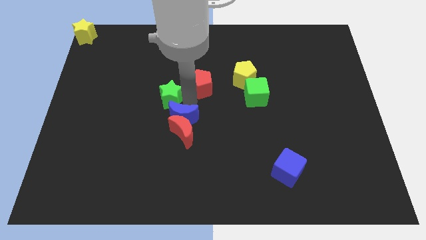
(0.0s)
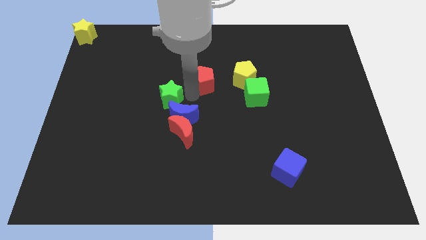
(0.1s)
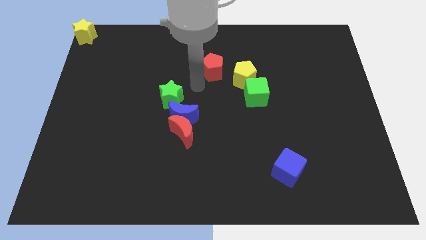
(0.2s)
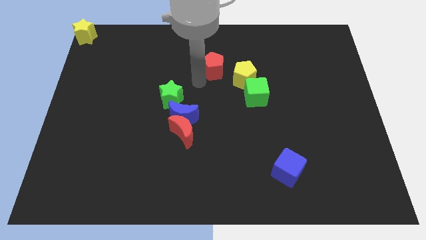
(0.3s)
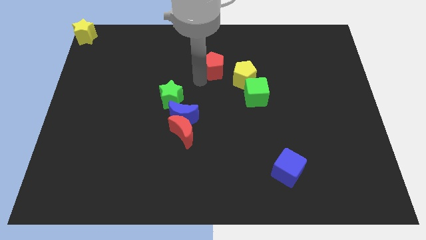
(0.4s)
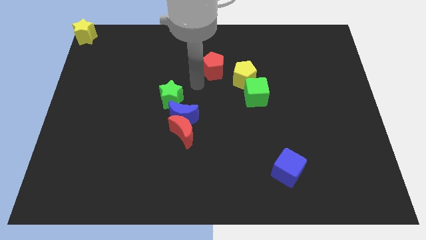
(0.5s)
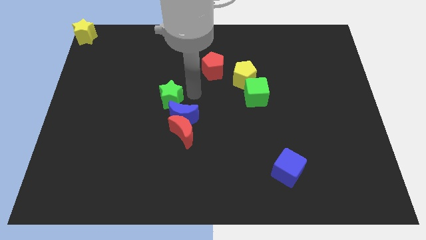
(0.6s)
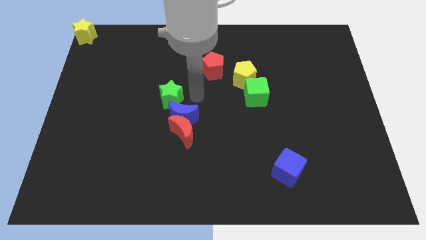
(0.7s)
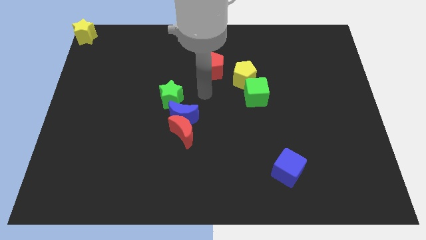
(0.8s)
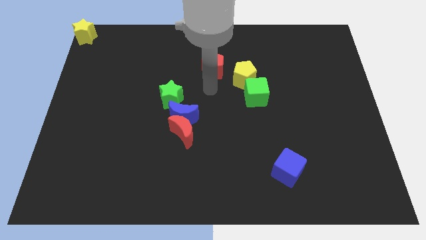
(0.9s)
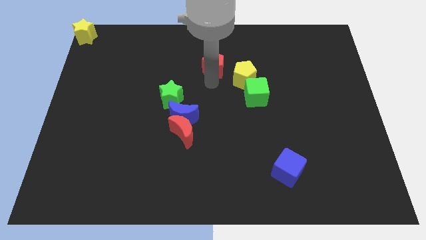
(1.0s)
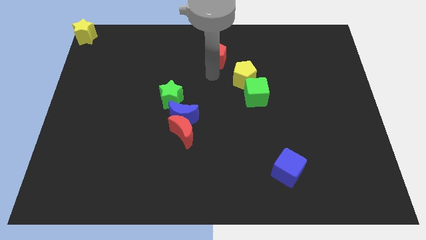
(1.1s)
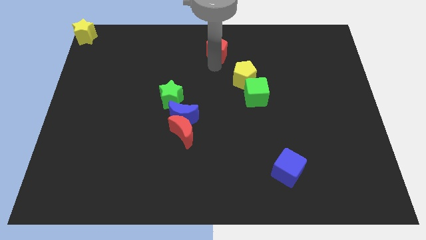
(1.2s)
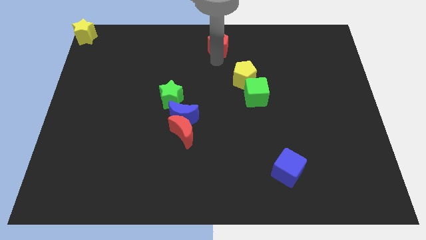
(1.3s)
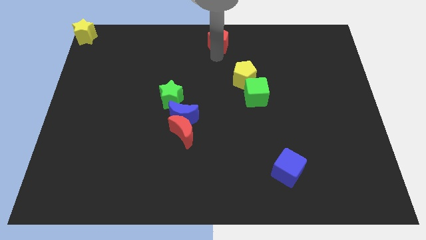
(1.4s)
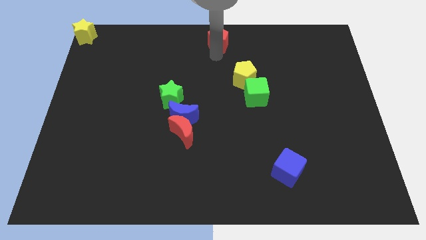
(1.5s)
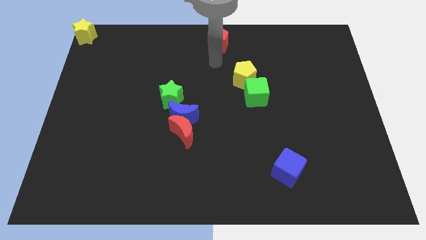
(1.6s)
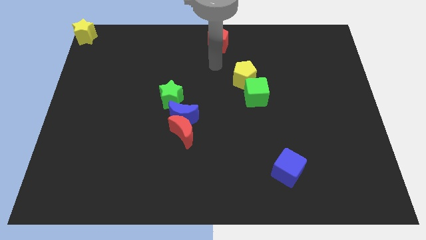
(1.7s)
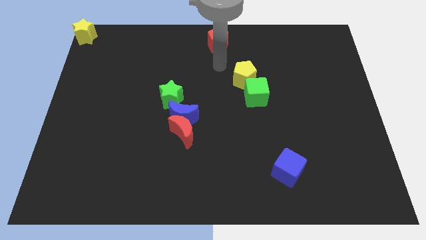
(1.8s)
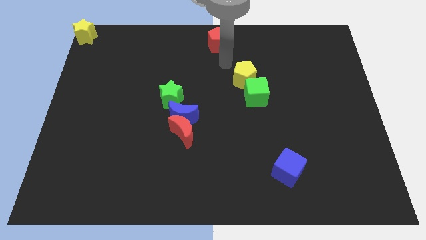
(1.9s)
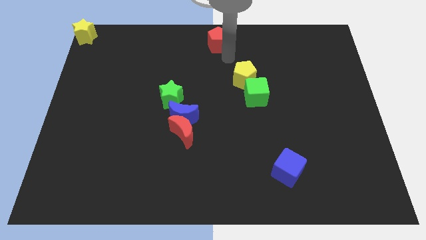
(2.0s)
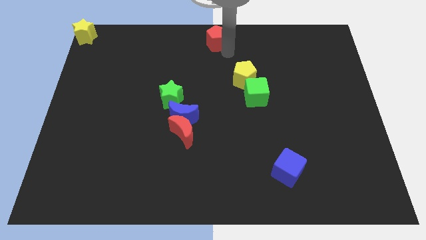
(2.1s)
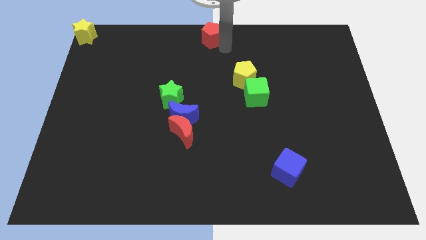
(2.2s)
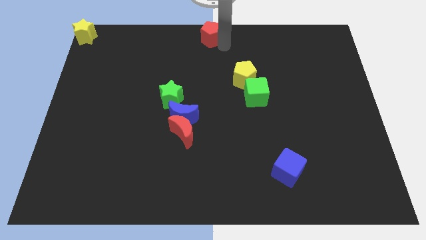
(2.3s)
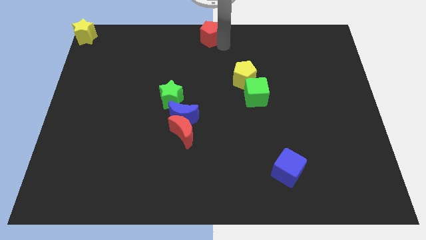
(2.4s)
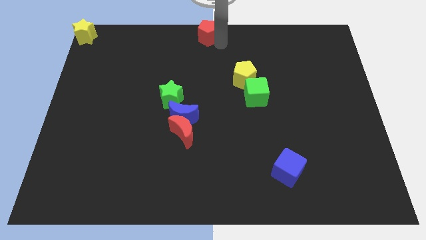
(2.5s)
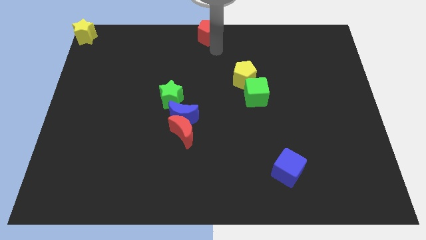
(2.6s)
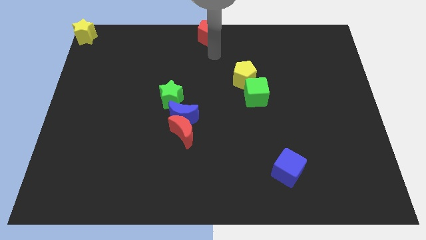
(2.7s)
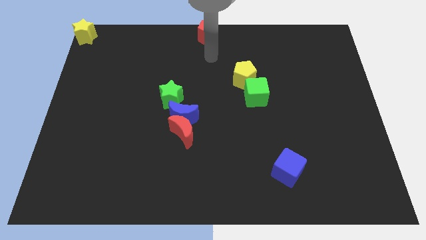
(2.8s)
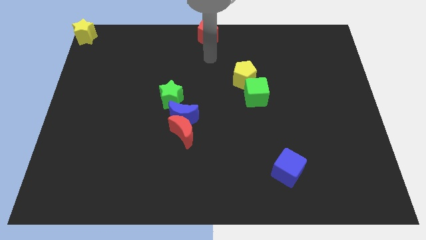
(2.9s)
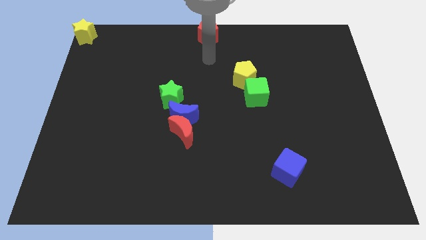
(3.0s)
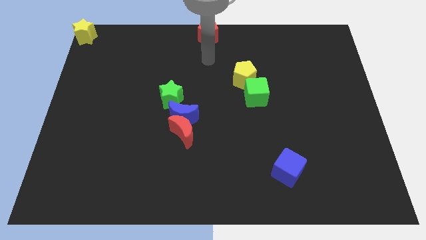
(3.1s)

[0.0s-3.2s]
put the red pentagon diagonally top left to the yellow pentagon

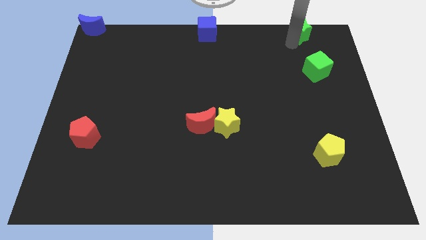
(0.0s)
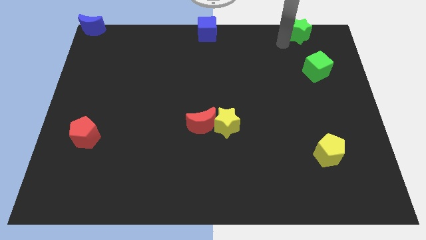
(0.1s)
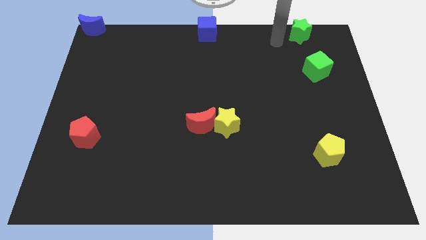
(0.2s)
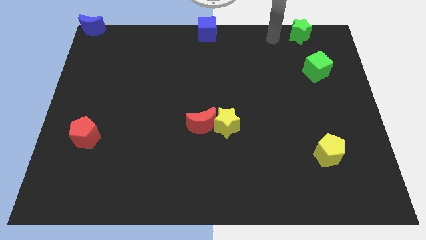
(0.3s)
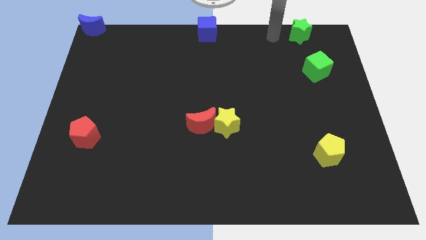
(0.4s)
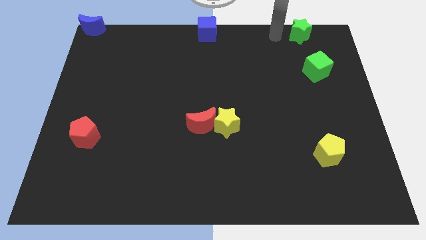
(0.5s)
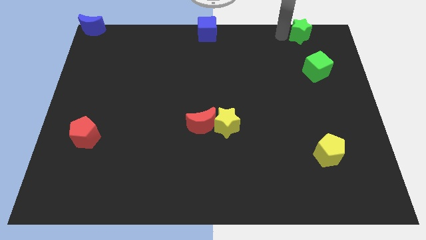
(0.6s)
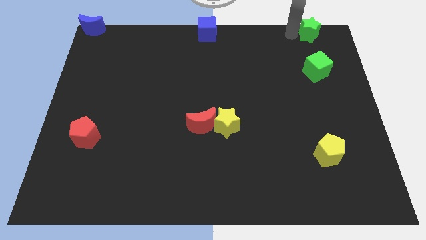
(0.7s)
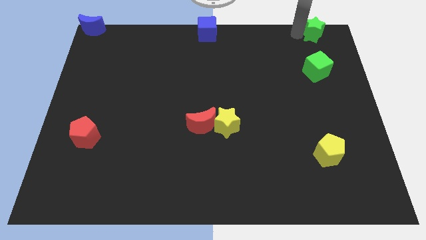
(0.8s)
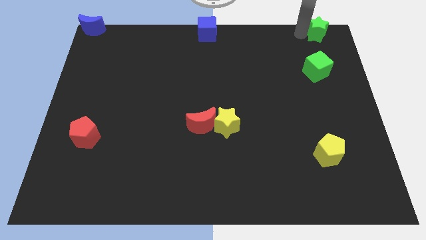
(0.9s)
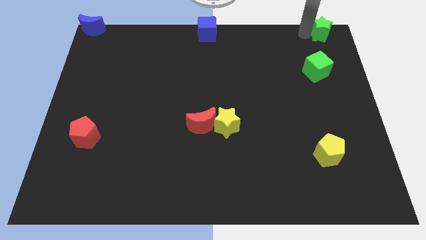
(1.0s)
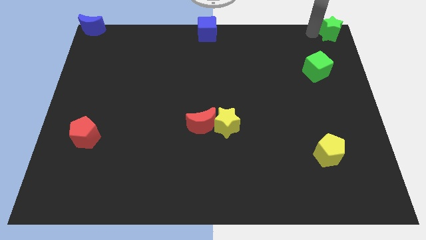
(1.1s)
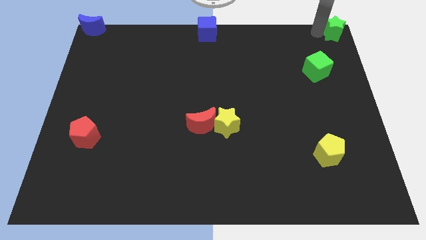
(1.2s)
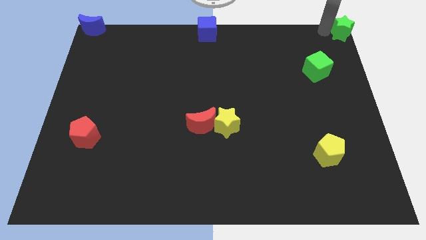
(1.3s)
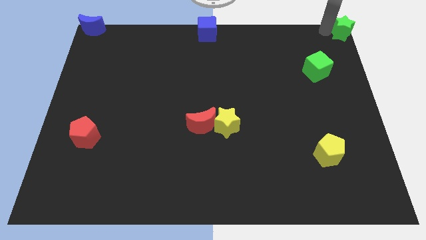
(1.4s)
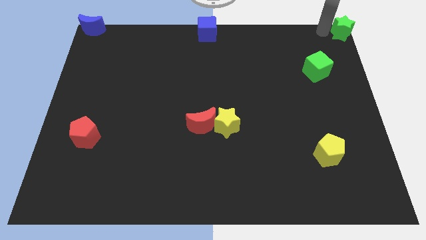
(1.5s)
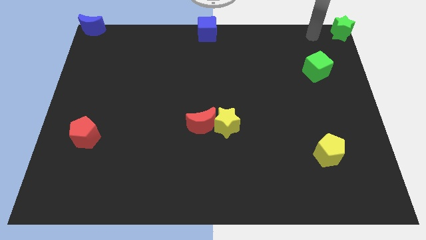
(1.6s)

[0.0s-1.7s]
push the green star to the top right corner of the board

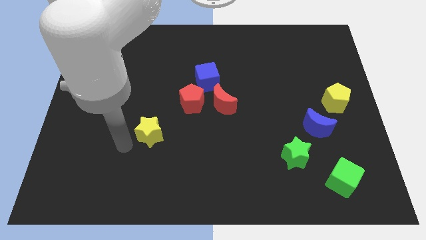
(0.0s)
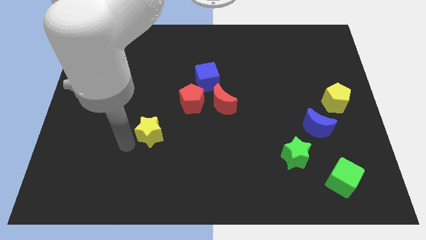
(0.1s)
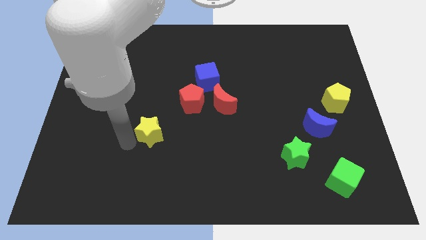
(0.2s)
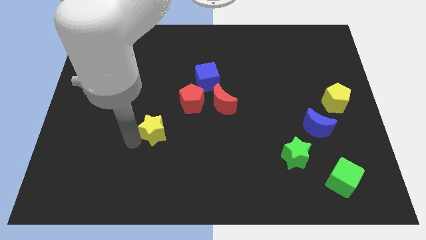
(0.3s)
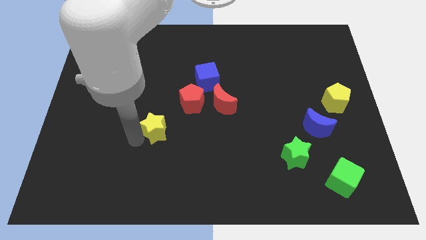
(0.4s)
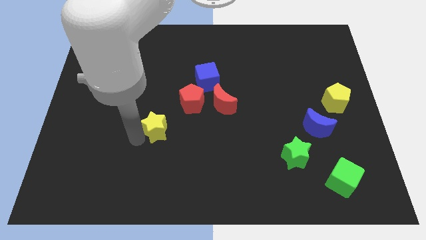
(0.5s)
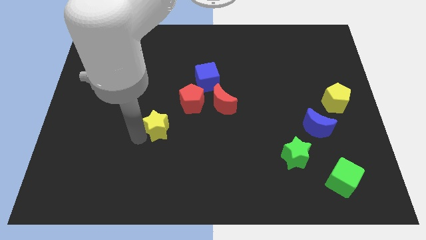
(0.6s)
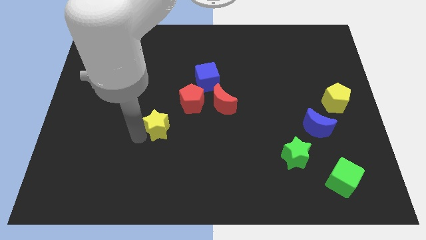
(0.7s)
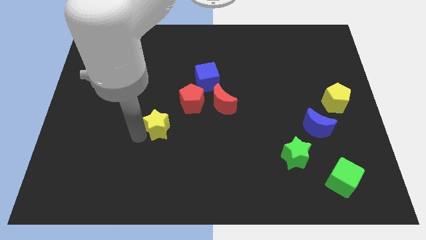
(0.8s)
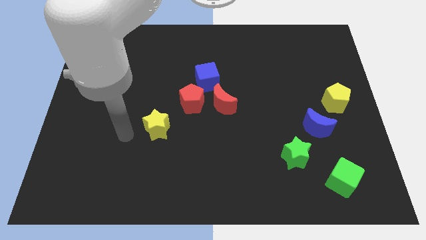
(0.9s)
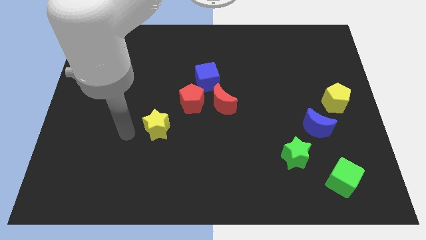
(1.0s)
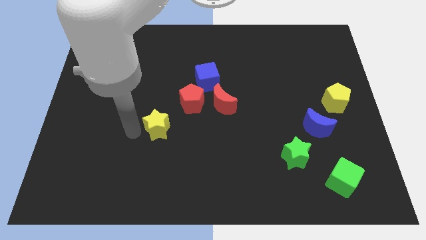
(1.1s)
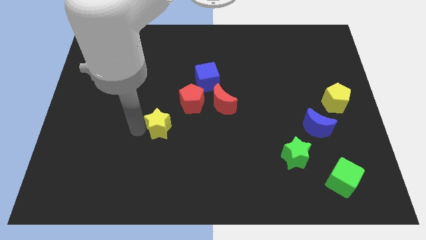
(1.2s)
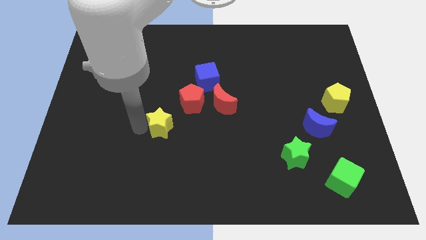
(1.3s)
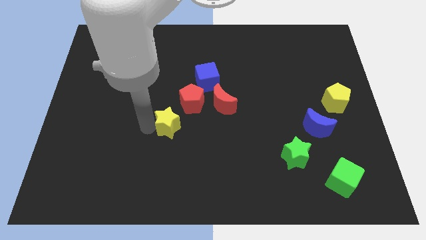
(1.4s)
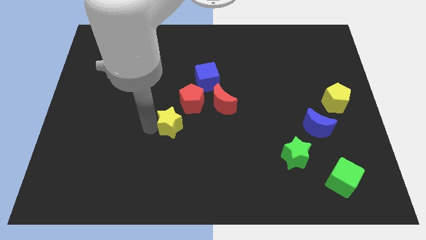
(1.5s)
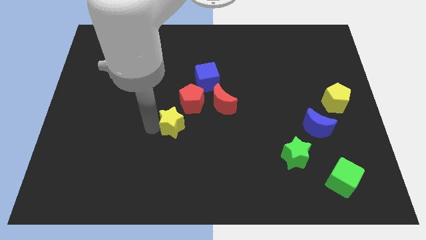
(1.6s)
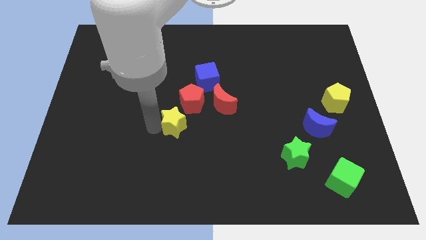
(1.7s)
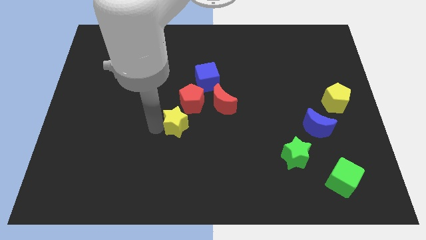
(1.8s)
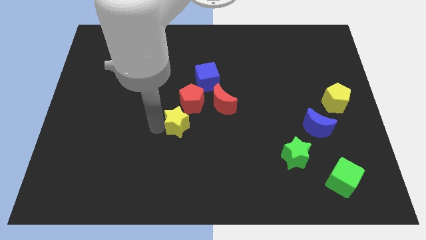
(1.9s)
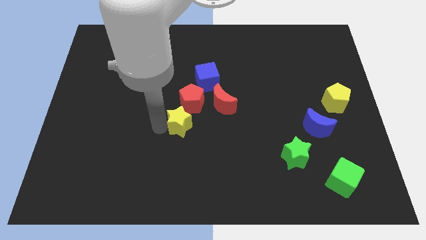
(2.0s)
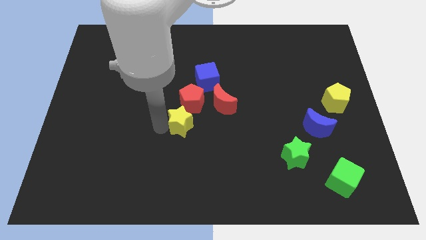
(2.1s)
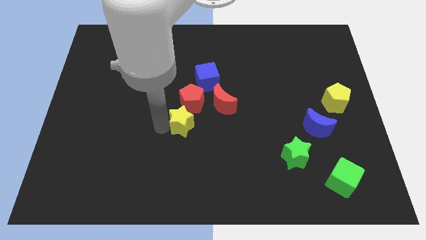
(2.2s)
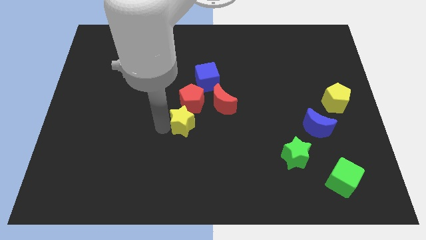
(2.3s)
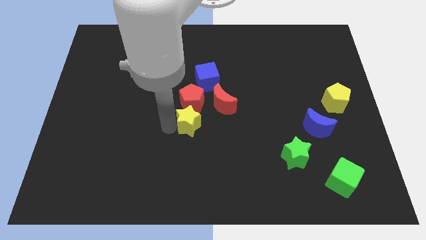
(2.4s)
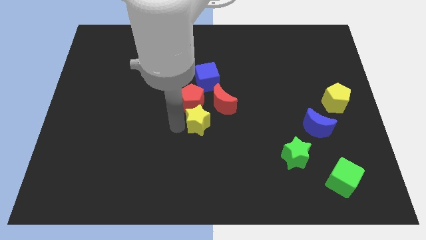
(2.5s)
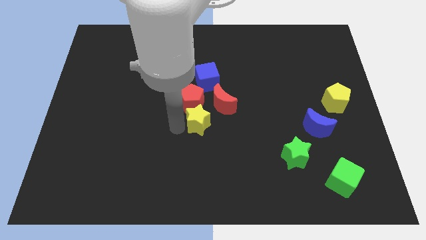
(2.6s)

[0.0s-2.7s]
move the yellow star close to the red pentagon

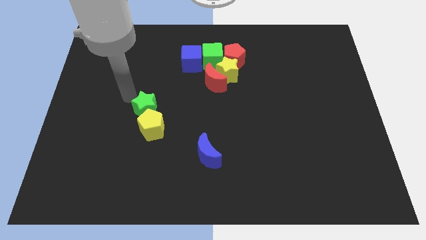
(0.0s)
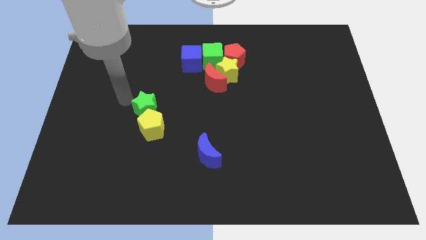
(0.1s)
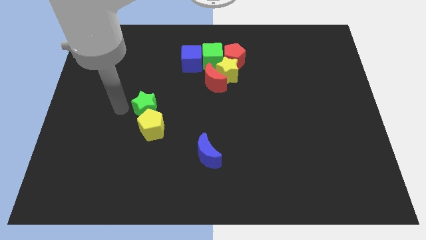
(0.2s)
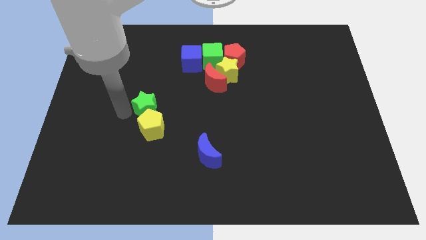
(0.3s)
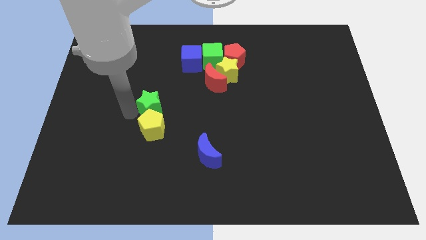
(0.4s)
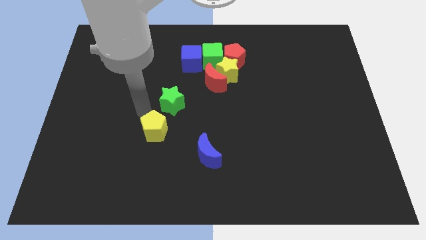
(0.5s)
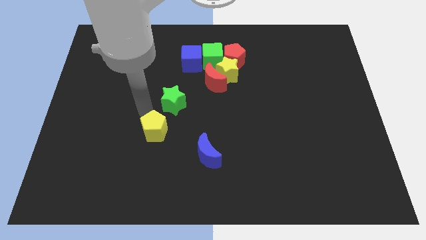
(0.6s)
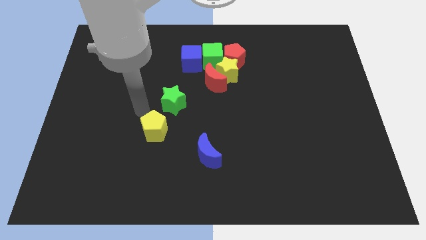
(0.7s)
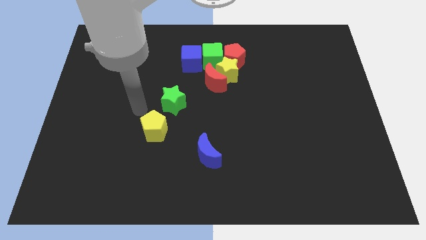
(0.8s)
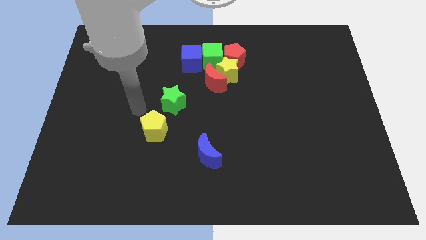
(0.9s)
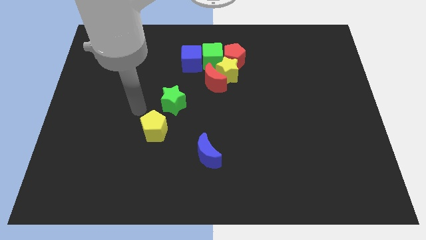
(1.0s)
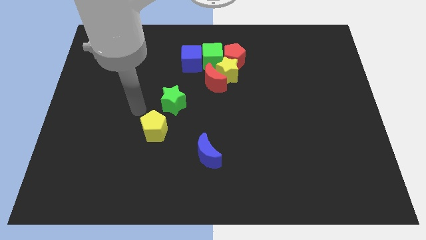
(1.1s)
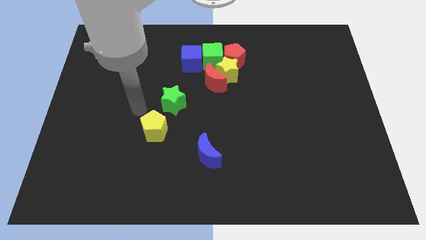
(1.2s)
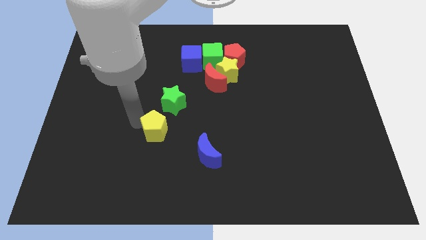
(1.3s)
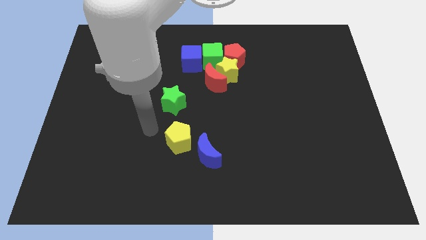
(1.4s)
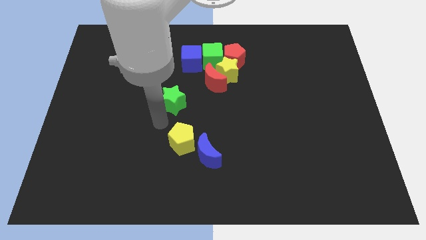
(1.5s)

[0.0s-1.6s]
separate the green star and yellow pentagon

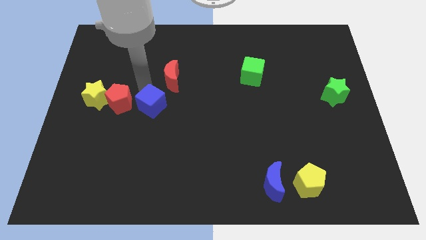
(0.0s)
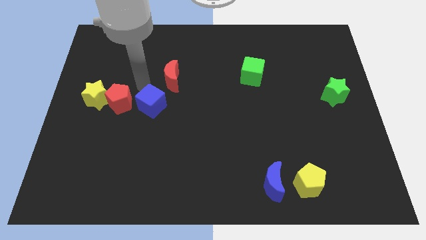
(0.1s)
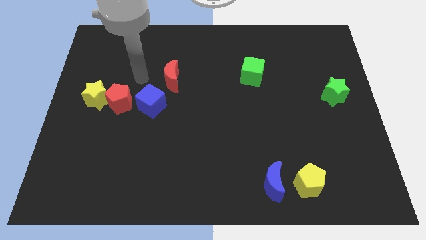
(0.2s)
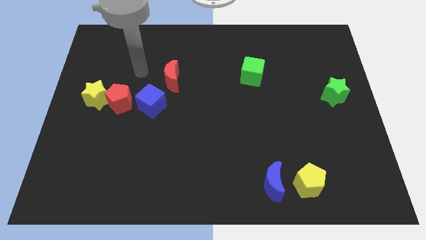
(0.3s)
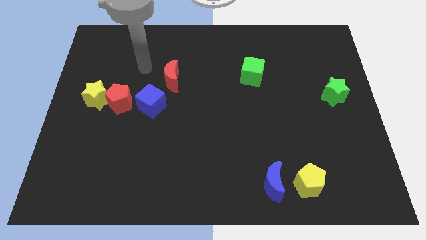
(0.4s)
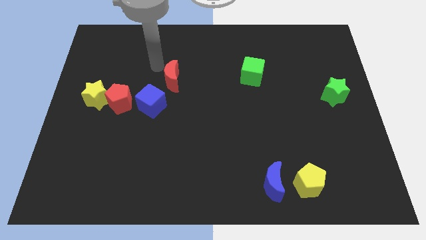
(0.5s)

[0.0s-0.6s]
move the arm away from the blue cube
